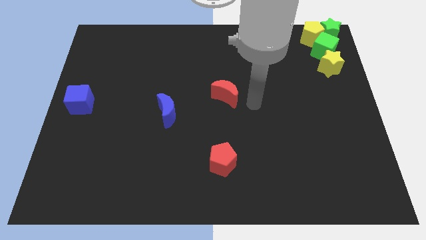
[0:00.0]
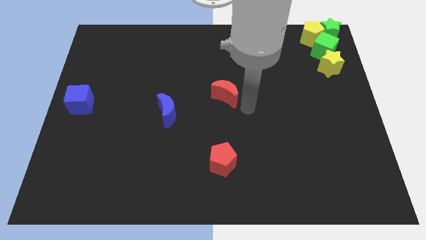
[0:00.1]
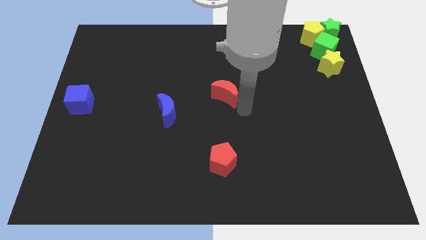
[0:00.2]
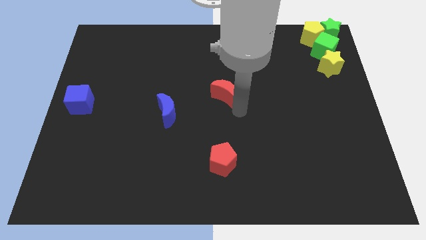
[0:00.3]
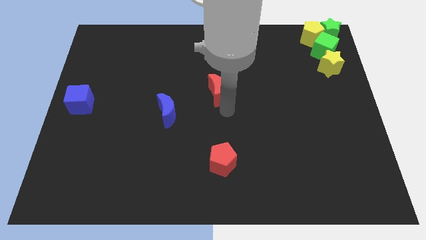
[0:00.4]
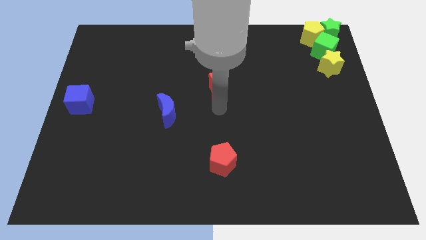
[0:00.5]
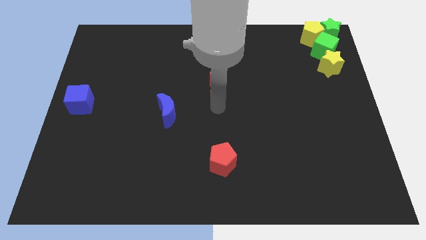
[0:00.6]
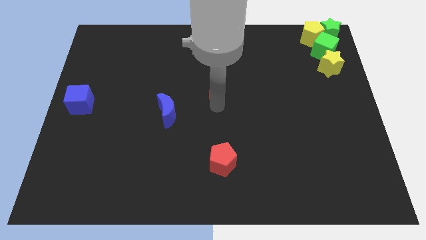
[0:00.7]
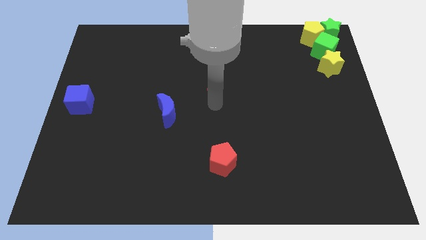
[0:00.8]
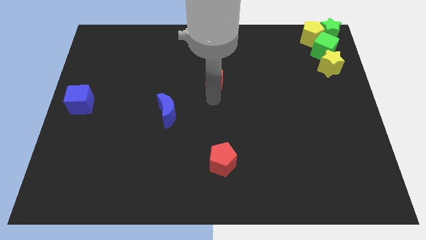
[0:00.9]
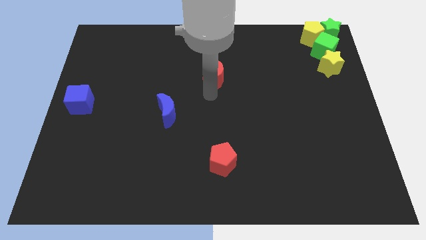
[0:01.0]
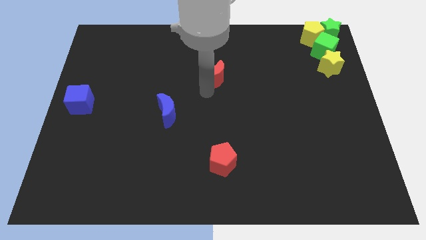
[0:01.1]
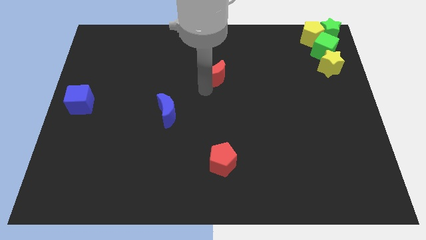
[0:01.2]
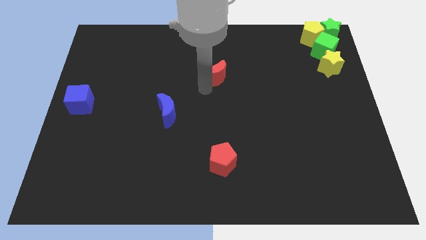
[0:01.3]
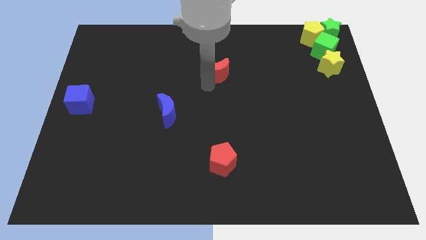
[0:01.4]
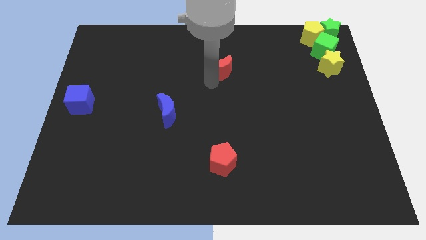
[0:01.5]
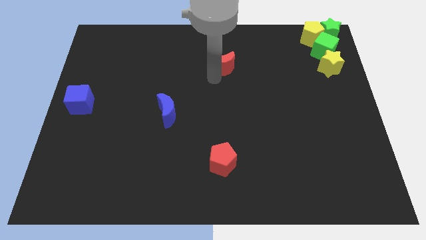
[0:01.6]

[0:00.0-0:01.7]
push the red moon towards the top center

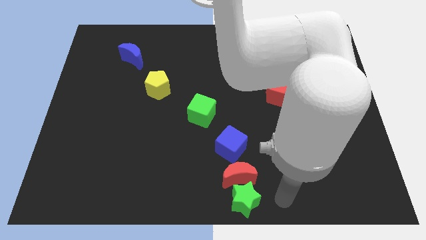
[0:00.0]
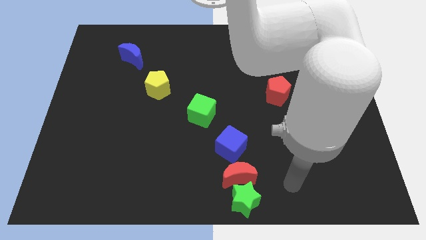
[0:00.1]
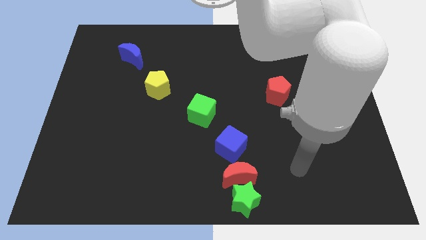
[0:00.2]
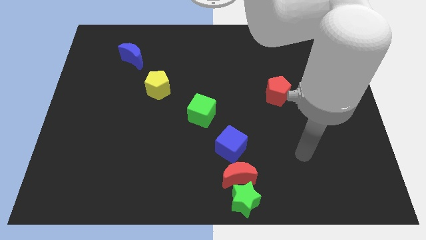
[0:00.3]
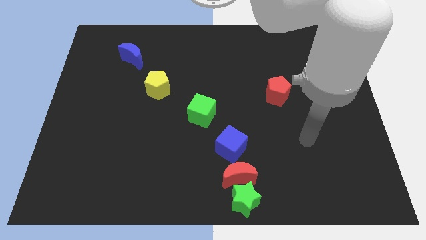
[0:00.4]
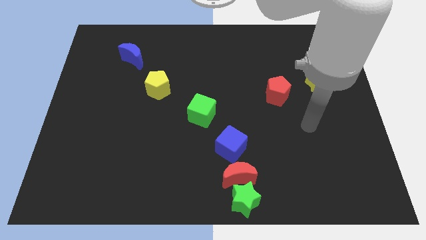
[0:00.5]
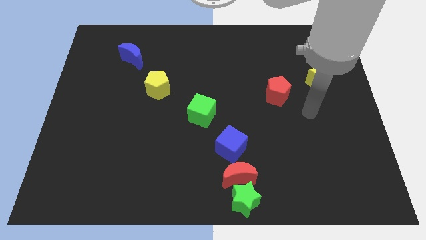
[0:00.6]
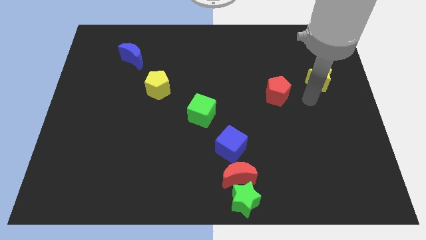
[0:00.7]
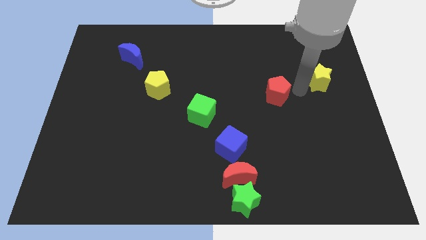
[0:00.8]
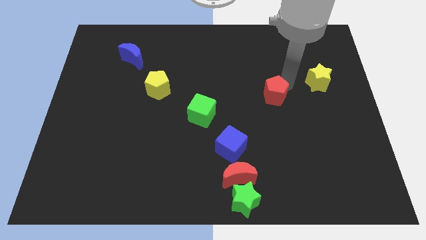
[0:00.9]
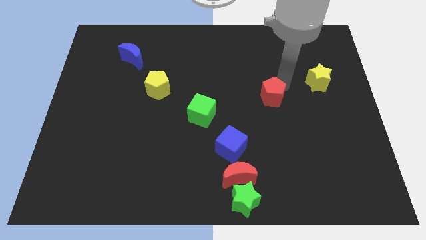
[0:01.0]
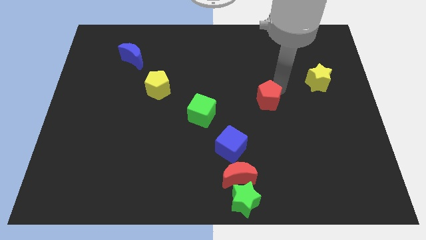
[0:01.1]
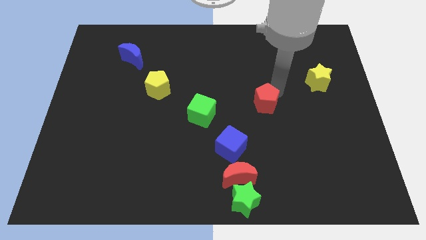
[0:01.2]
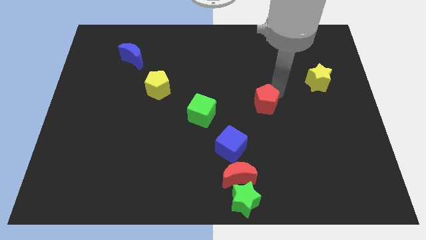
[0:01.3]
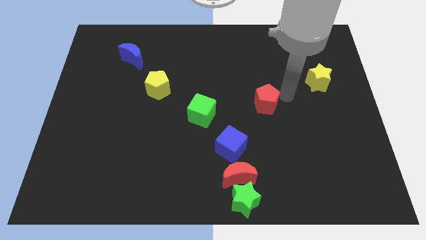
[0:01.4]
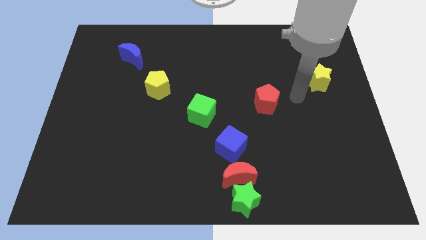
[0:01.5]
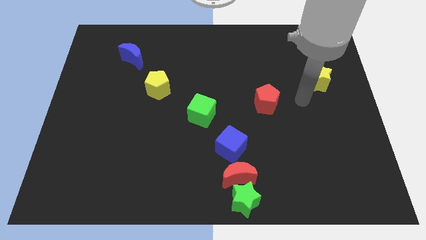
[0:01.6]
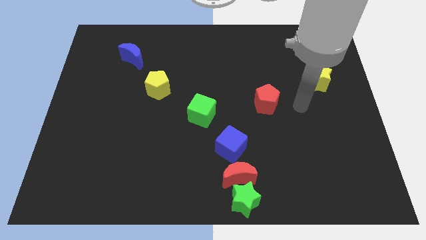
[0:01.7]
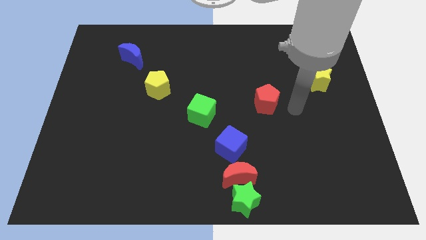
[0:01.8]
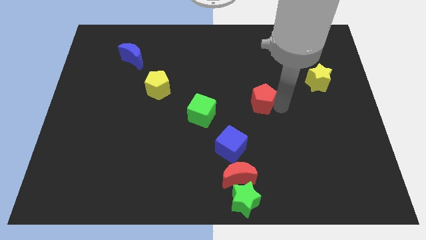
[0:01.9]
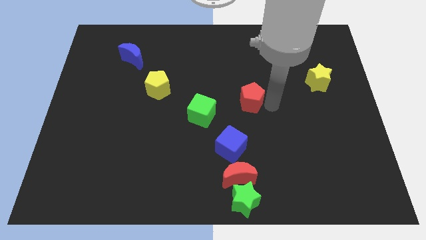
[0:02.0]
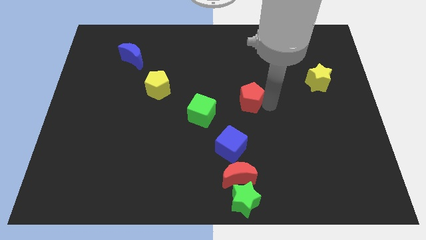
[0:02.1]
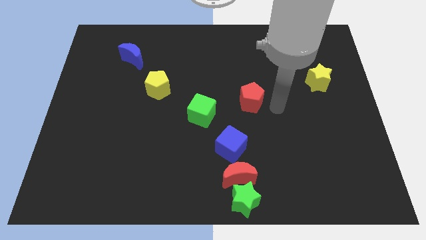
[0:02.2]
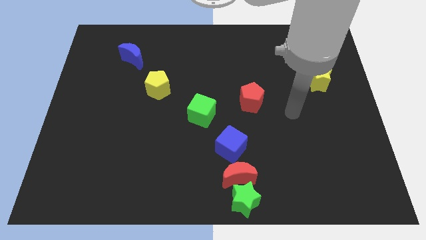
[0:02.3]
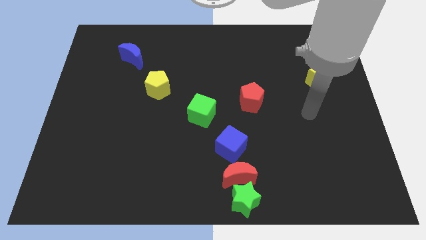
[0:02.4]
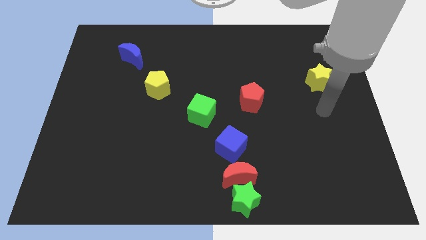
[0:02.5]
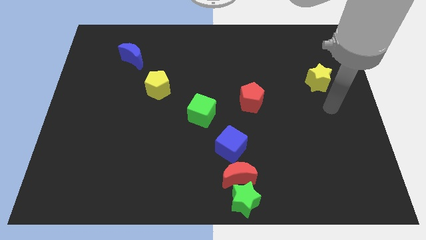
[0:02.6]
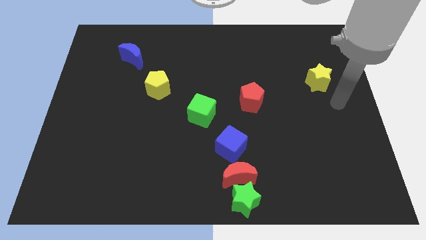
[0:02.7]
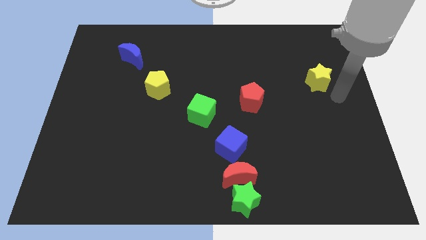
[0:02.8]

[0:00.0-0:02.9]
move red pentagon towards green cube

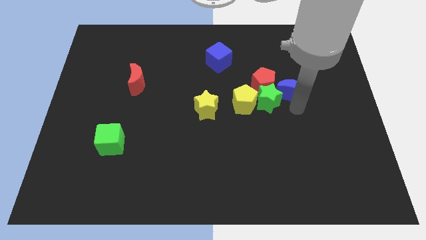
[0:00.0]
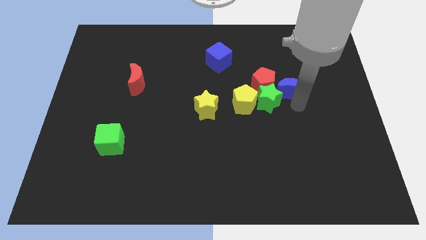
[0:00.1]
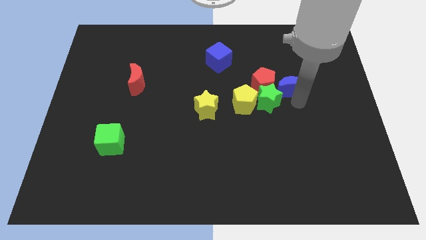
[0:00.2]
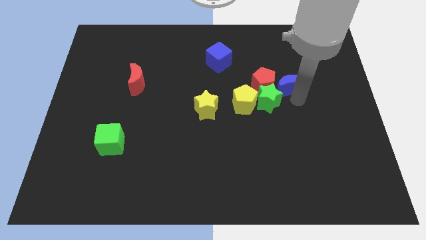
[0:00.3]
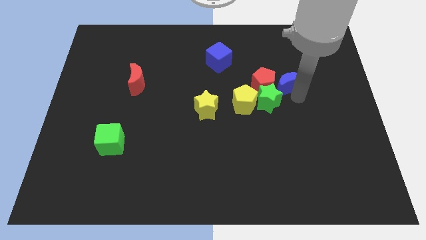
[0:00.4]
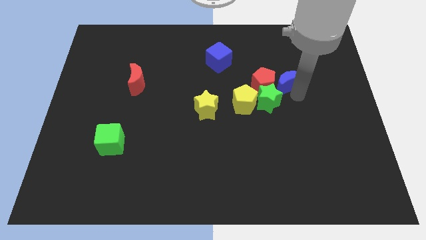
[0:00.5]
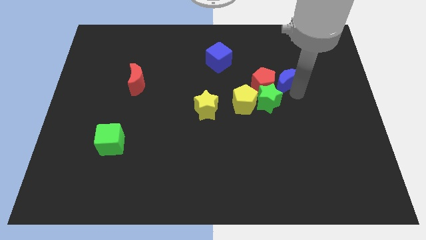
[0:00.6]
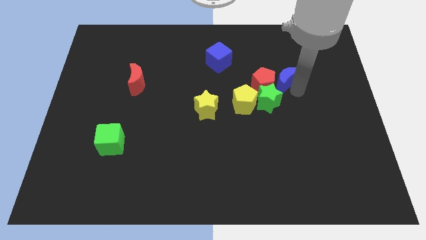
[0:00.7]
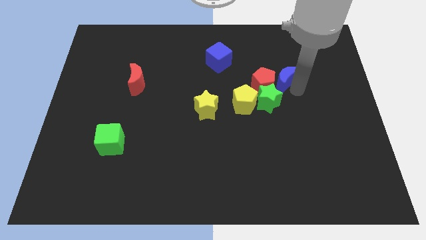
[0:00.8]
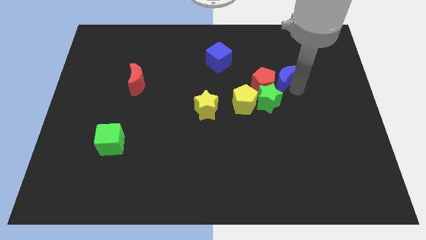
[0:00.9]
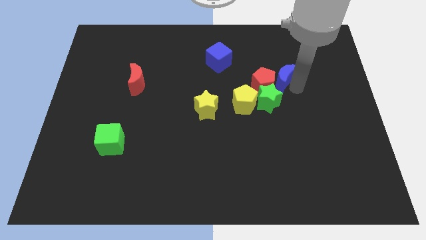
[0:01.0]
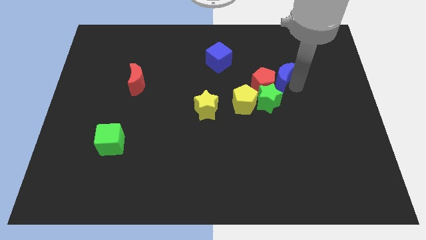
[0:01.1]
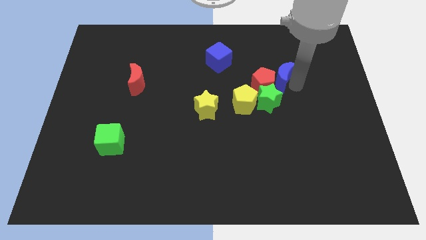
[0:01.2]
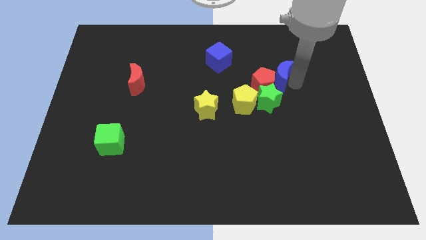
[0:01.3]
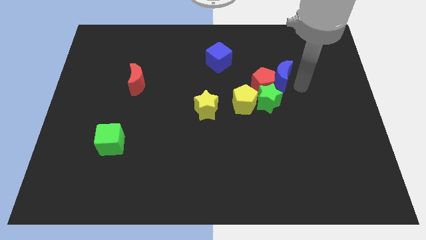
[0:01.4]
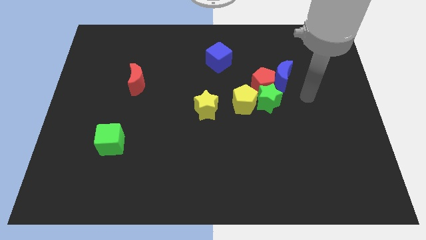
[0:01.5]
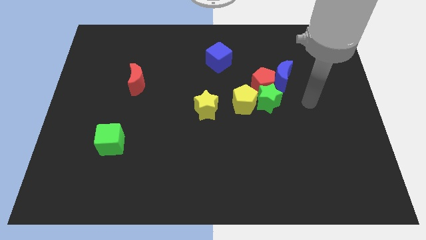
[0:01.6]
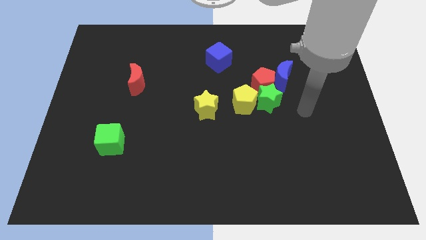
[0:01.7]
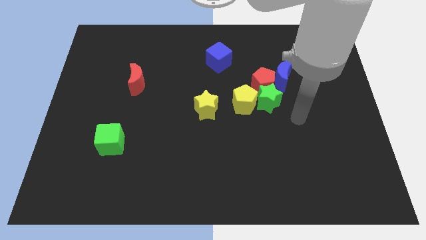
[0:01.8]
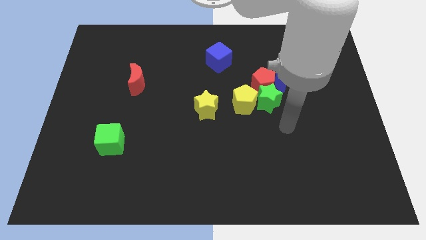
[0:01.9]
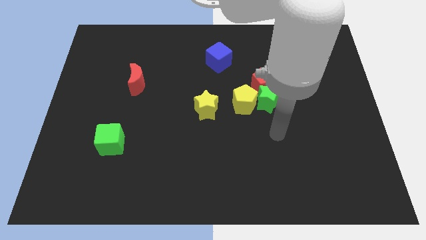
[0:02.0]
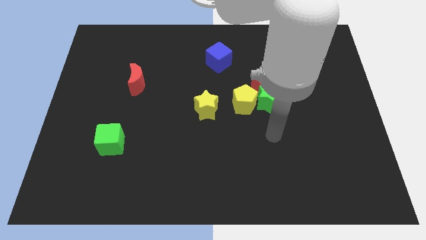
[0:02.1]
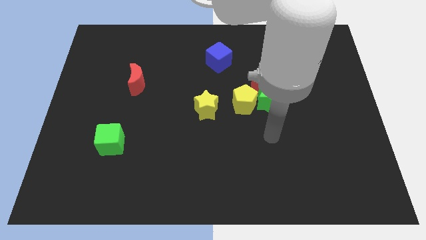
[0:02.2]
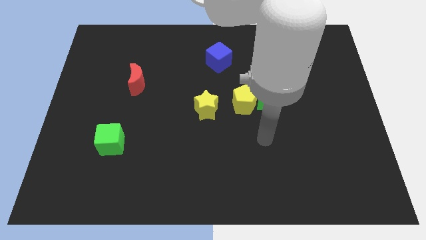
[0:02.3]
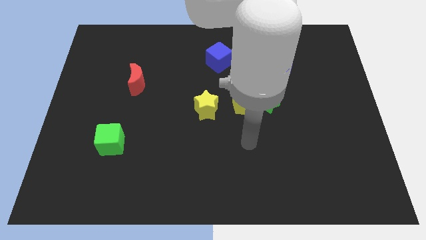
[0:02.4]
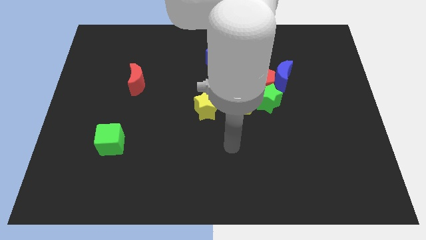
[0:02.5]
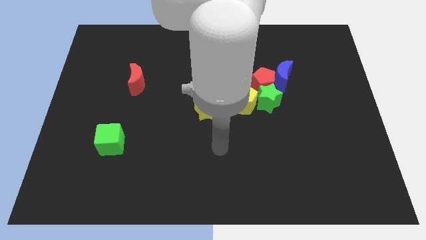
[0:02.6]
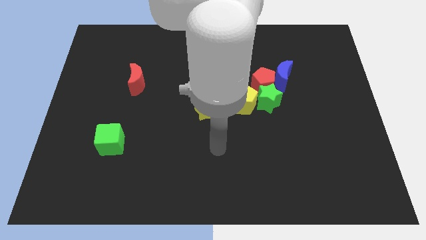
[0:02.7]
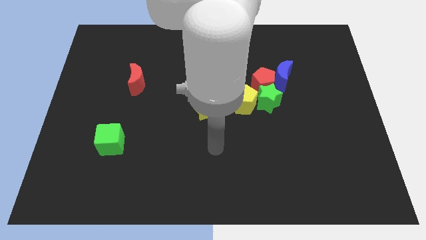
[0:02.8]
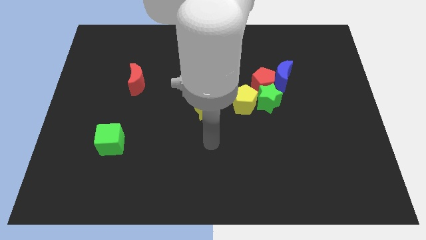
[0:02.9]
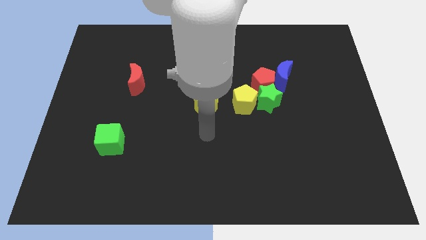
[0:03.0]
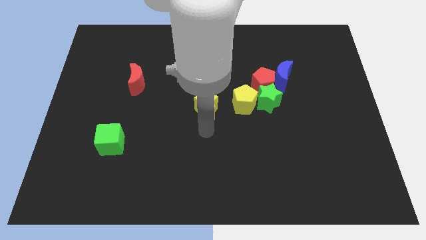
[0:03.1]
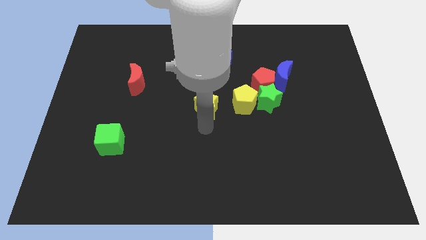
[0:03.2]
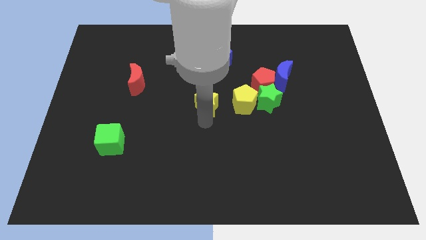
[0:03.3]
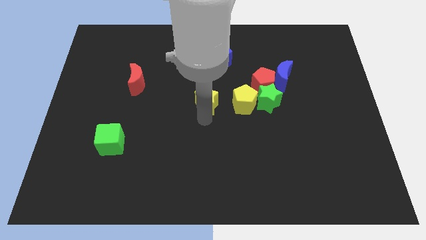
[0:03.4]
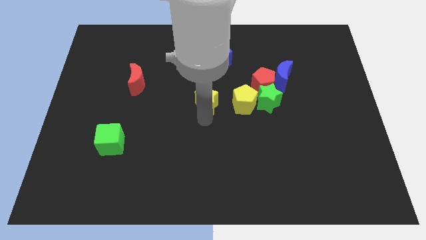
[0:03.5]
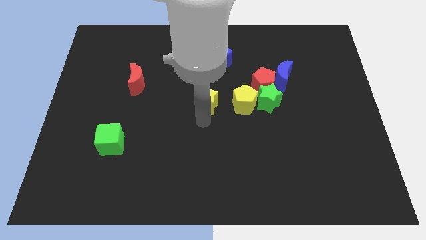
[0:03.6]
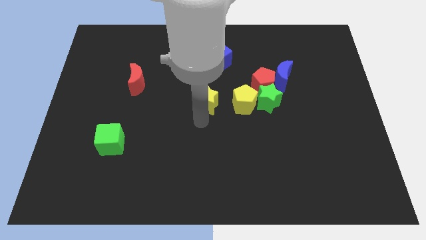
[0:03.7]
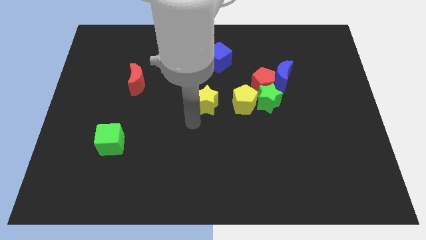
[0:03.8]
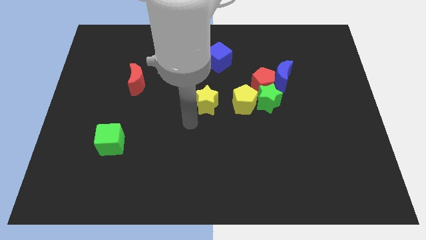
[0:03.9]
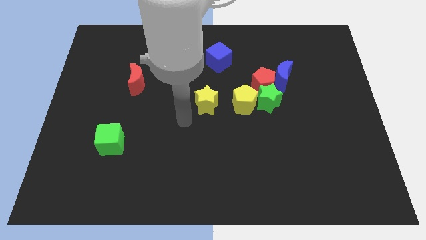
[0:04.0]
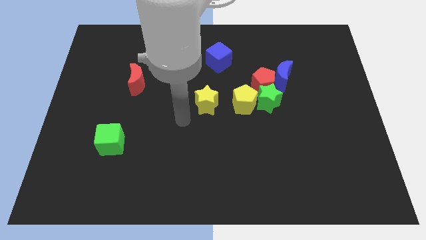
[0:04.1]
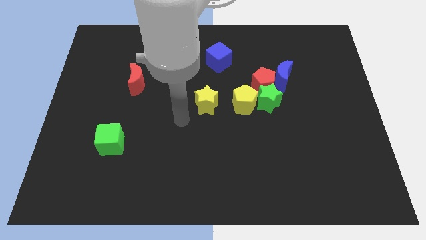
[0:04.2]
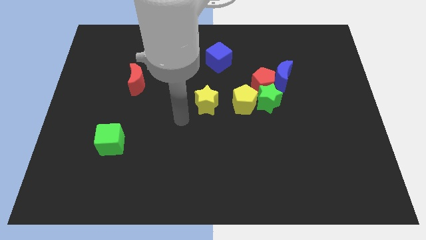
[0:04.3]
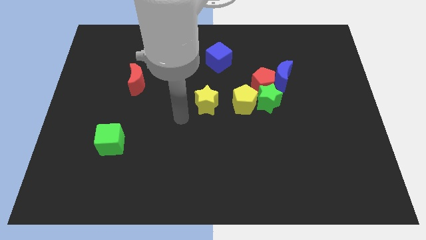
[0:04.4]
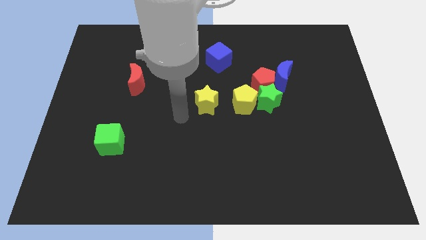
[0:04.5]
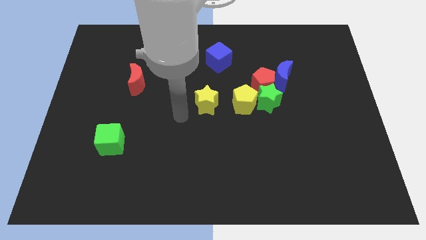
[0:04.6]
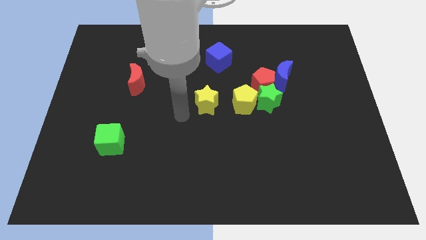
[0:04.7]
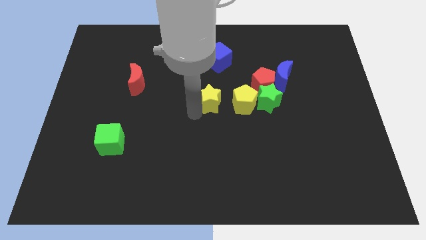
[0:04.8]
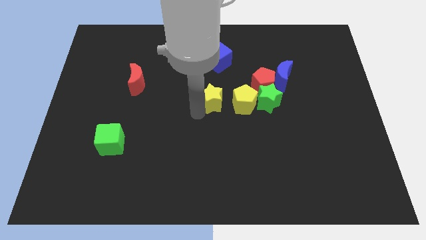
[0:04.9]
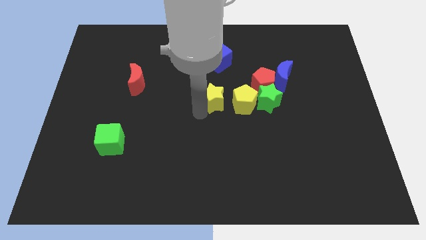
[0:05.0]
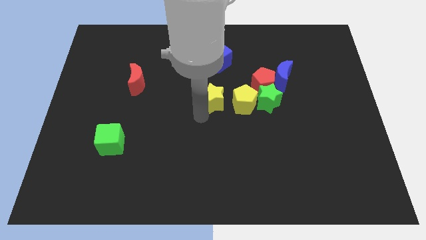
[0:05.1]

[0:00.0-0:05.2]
push the blue crescent and yellow star slightly upwards
